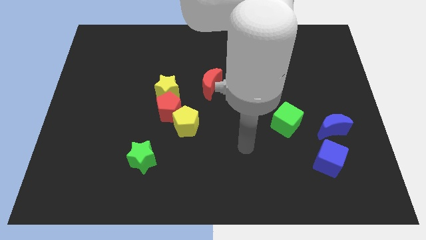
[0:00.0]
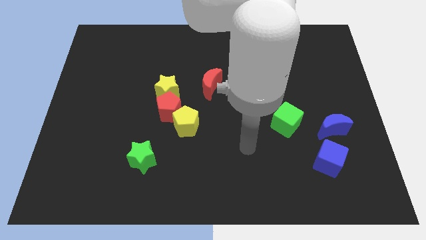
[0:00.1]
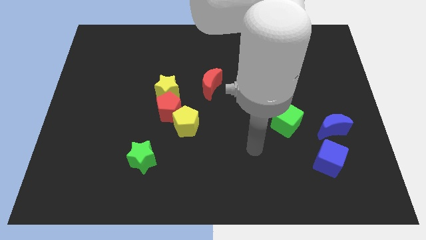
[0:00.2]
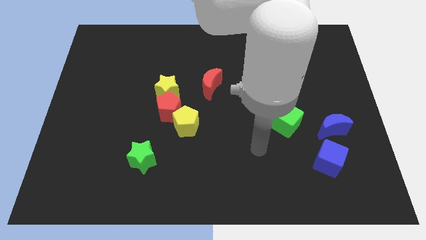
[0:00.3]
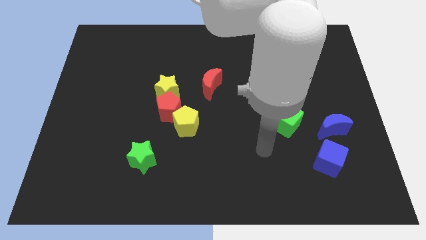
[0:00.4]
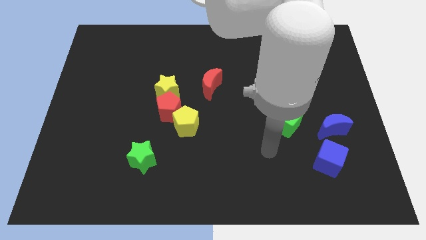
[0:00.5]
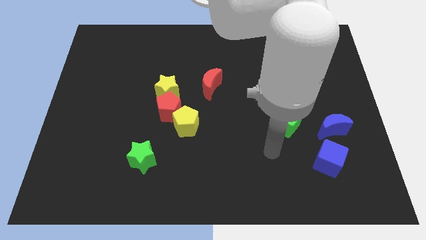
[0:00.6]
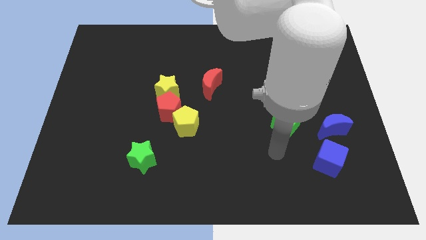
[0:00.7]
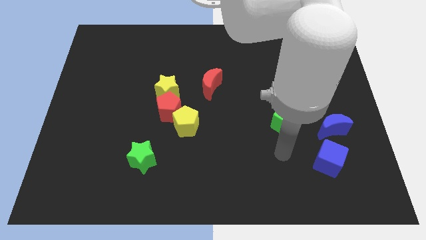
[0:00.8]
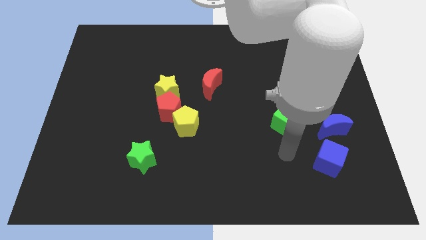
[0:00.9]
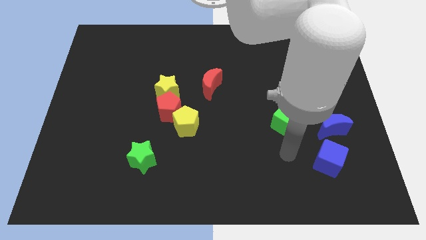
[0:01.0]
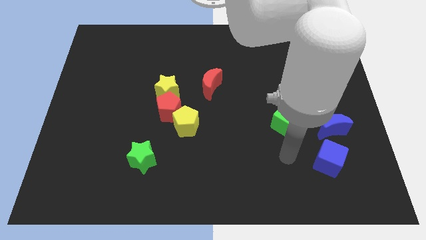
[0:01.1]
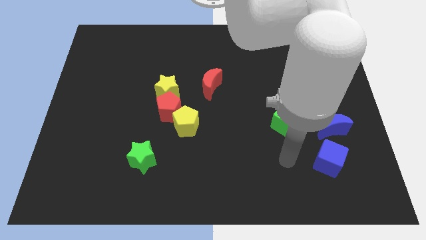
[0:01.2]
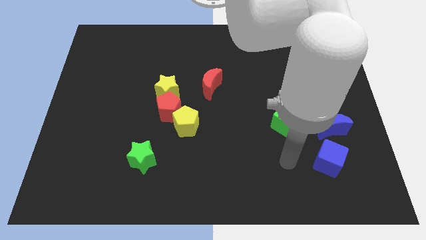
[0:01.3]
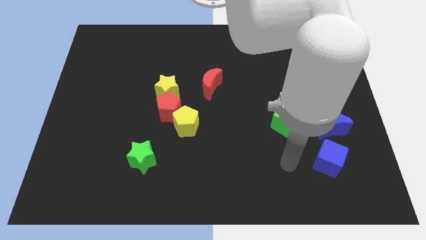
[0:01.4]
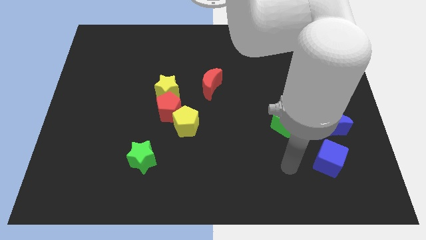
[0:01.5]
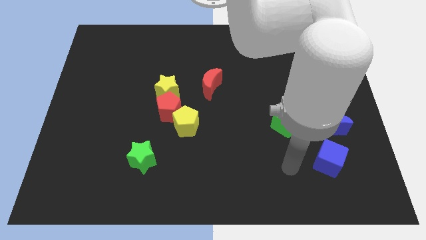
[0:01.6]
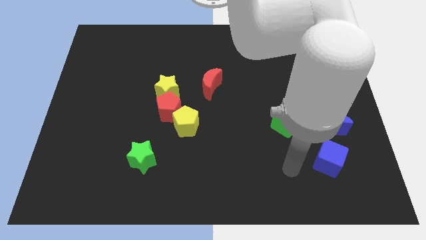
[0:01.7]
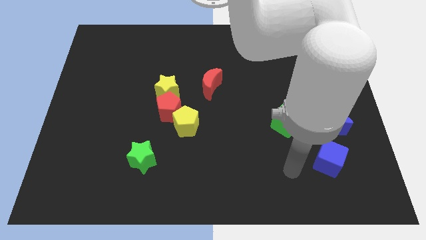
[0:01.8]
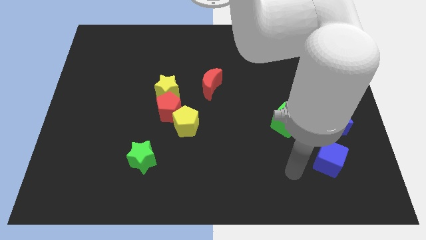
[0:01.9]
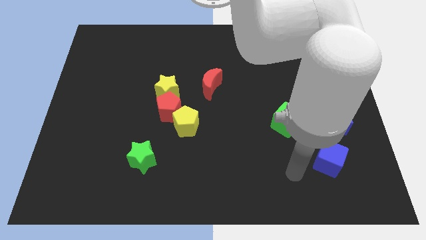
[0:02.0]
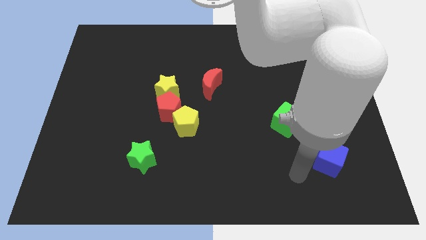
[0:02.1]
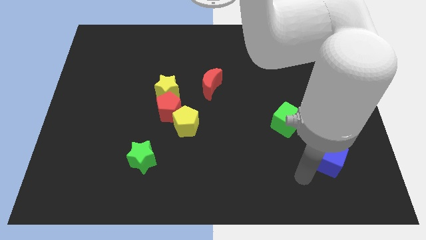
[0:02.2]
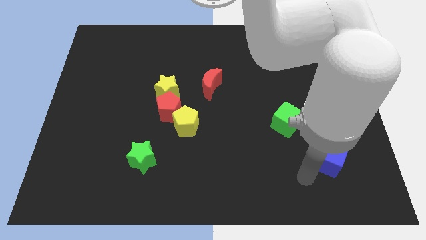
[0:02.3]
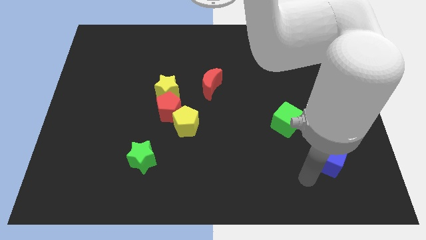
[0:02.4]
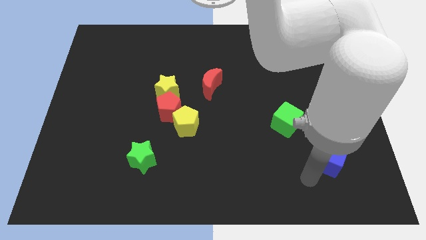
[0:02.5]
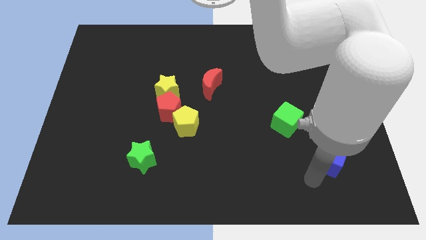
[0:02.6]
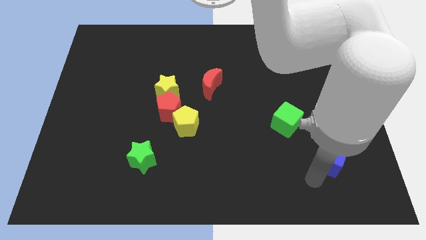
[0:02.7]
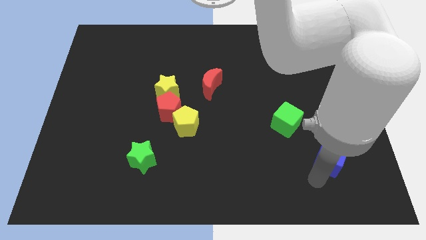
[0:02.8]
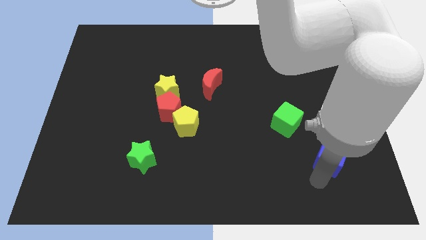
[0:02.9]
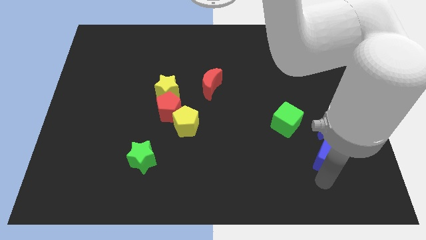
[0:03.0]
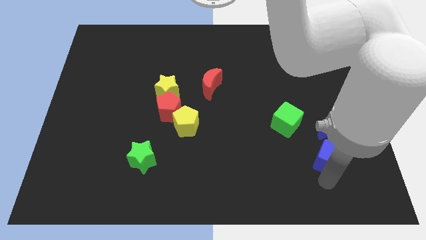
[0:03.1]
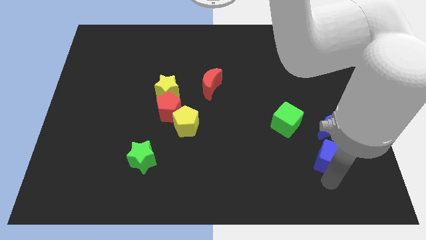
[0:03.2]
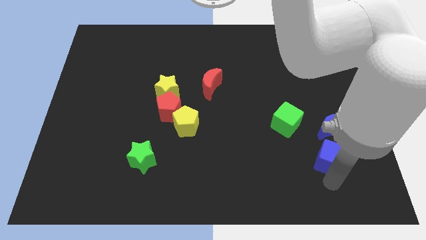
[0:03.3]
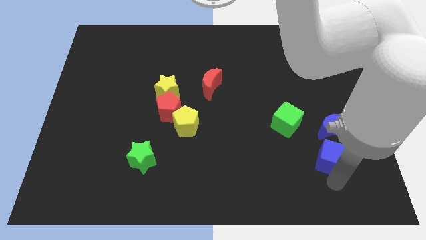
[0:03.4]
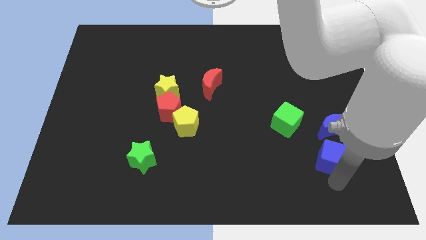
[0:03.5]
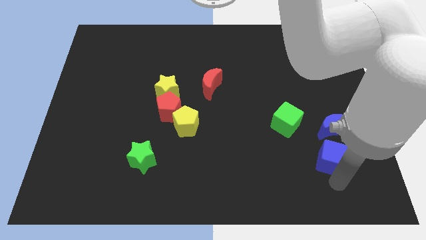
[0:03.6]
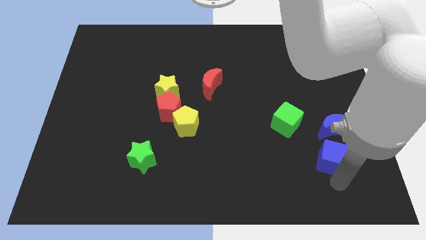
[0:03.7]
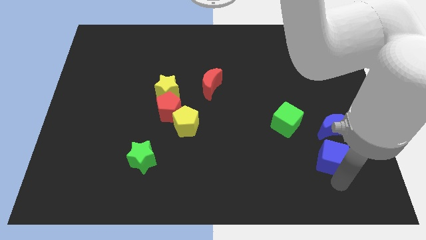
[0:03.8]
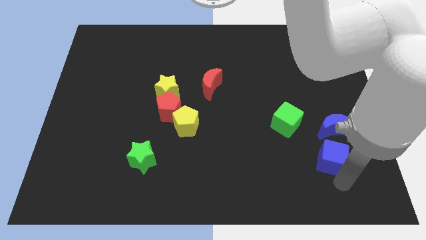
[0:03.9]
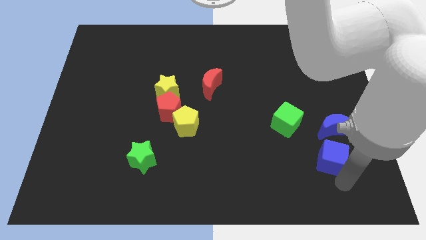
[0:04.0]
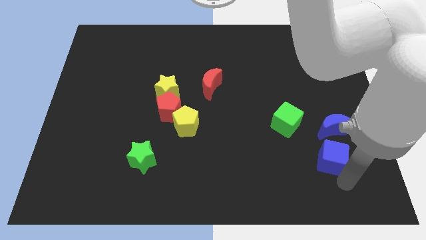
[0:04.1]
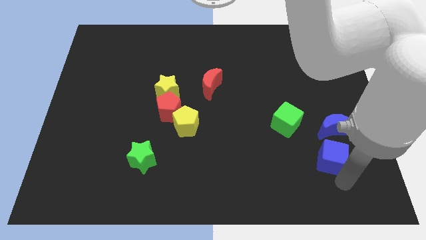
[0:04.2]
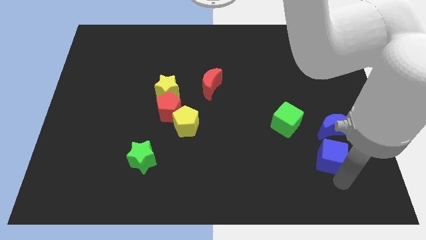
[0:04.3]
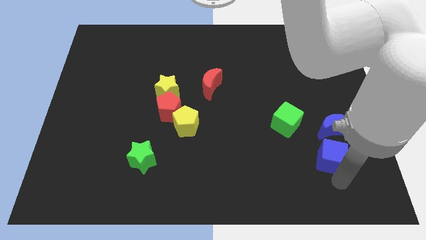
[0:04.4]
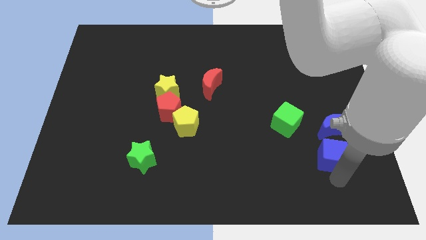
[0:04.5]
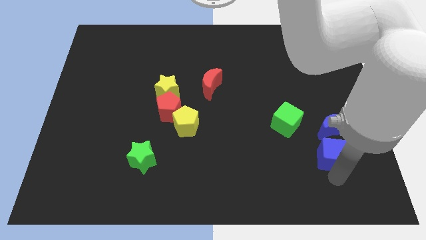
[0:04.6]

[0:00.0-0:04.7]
place the blue cube below the blue crescent

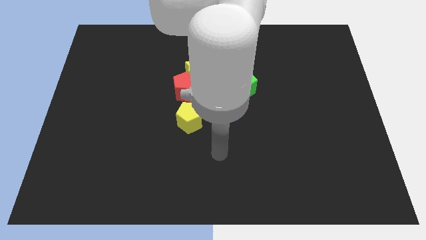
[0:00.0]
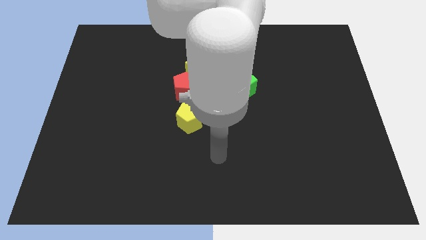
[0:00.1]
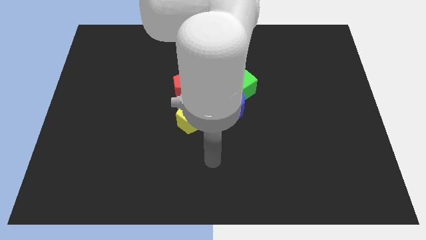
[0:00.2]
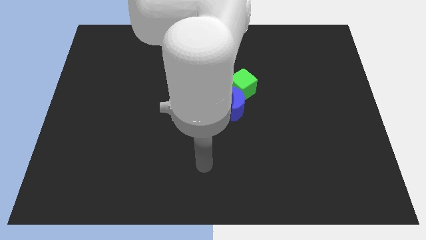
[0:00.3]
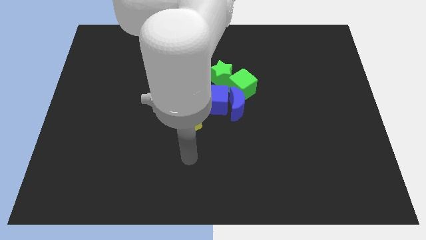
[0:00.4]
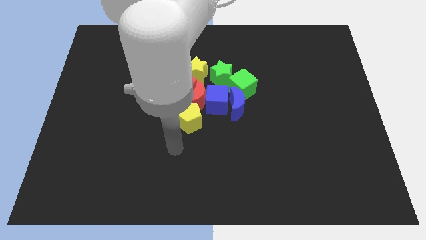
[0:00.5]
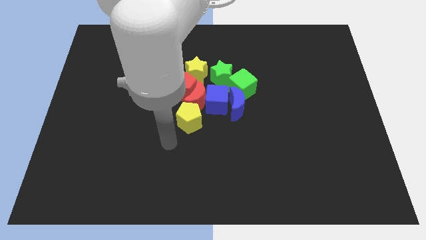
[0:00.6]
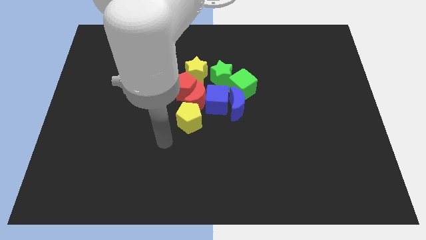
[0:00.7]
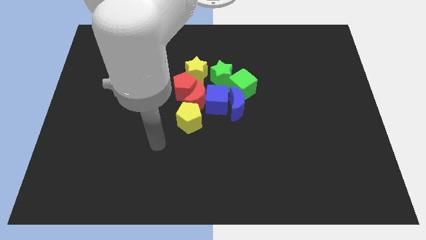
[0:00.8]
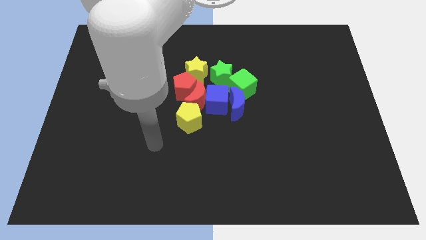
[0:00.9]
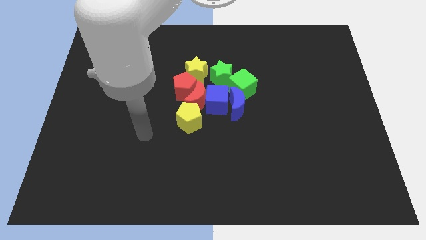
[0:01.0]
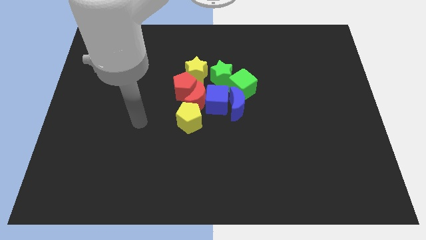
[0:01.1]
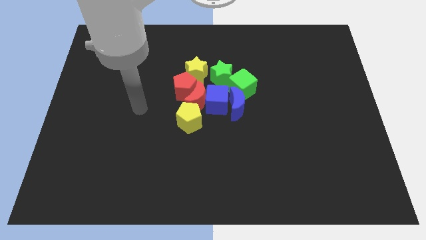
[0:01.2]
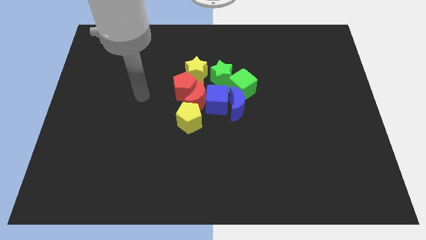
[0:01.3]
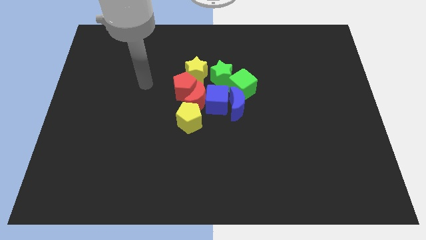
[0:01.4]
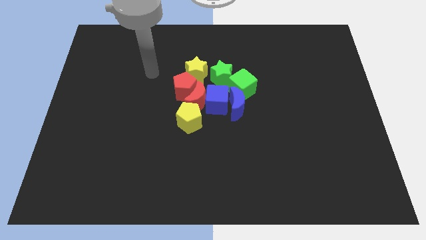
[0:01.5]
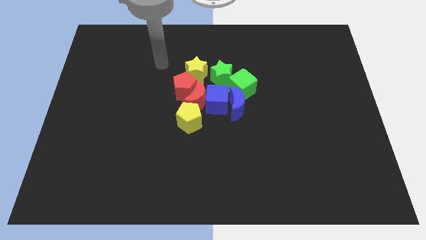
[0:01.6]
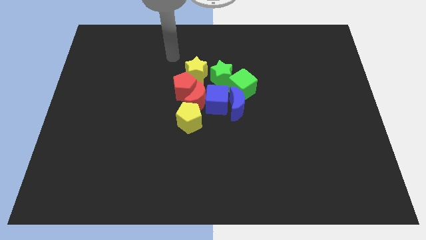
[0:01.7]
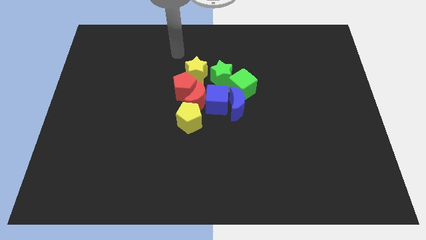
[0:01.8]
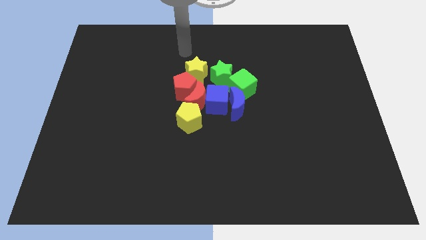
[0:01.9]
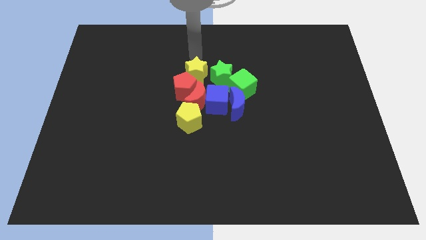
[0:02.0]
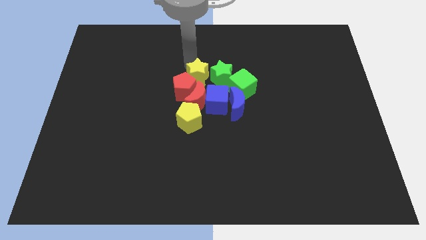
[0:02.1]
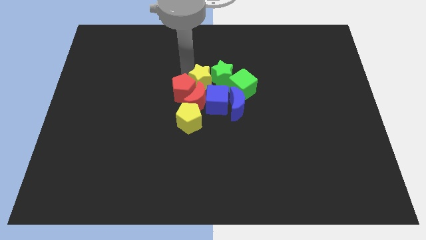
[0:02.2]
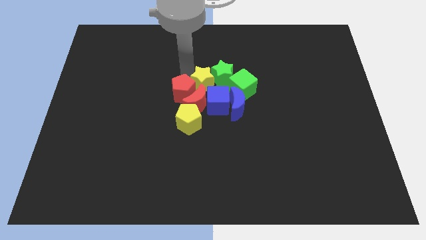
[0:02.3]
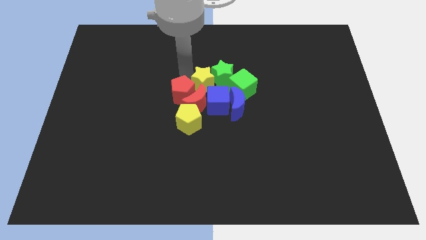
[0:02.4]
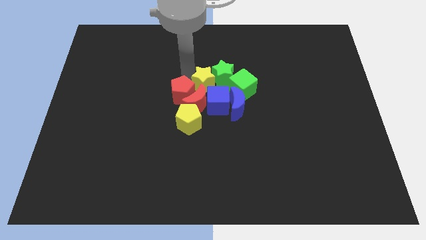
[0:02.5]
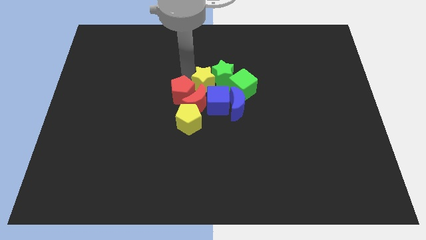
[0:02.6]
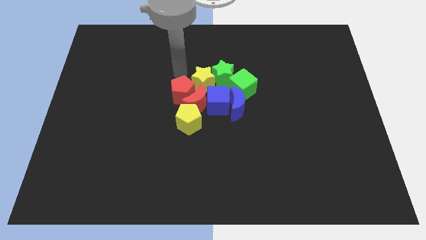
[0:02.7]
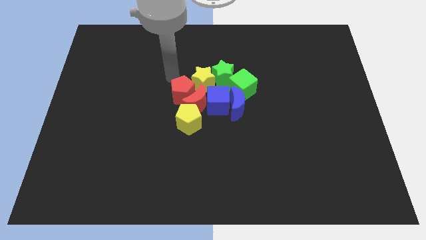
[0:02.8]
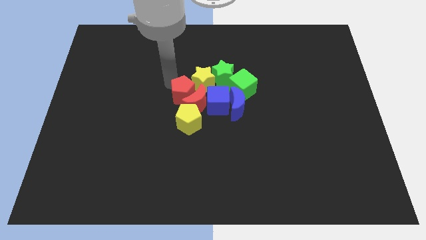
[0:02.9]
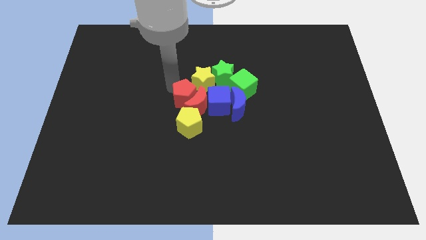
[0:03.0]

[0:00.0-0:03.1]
push the yellow star into the group of all blocks

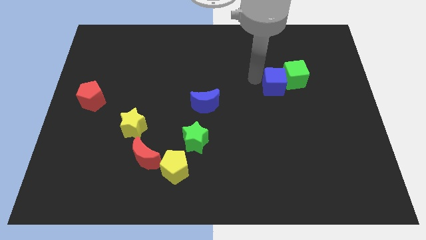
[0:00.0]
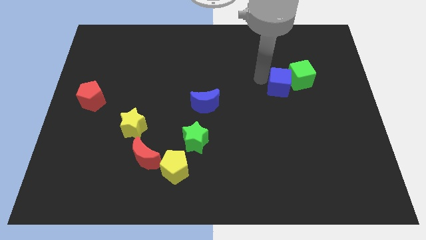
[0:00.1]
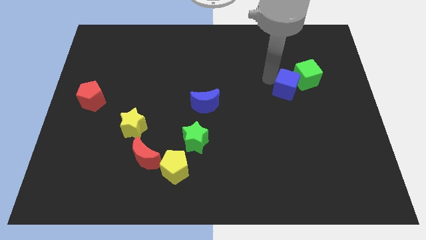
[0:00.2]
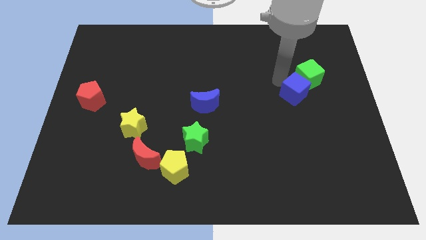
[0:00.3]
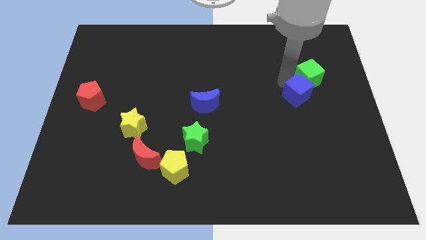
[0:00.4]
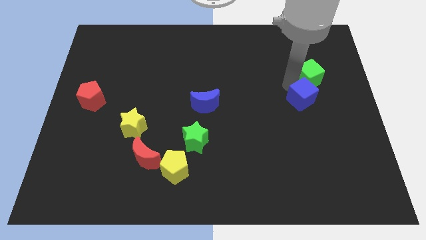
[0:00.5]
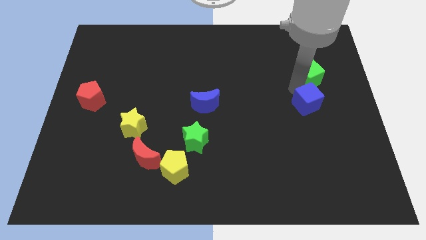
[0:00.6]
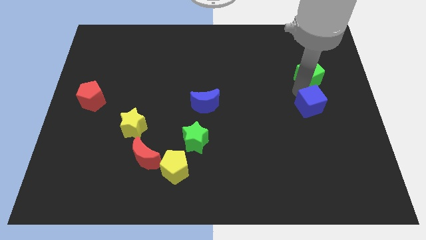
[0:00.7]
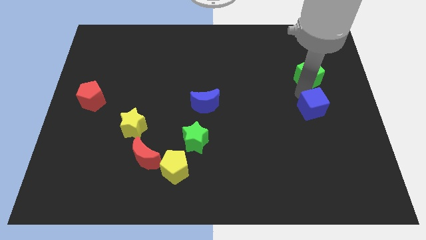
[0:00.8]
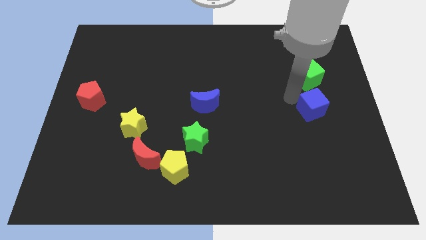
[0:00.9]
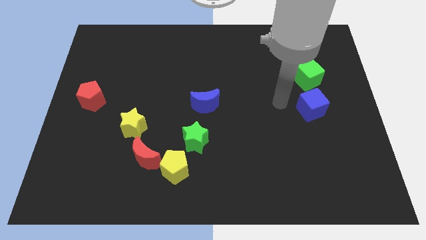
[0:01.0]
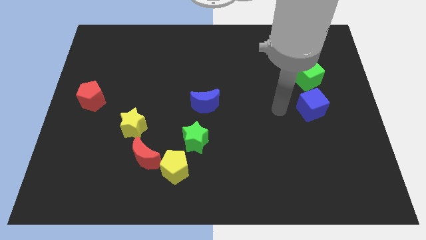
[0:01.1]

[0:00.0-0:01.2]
push the blue cube to the bottom of the green cube
